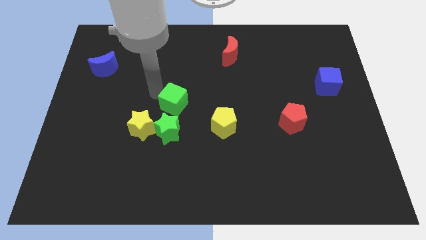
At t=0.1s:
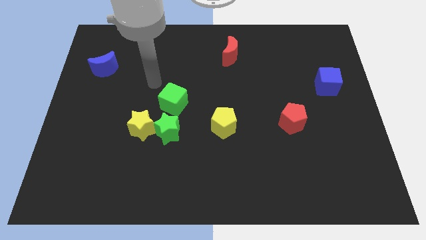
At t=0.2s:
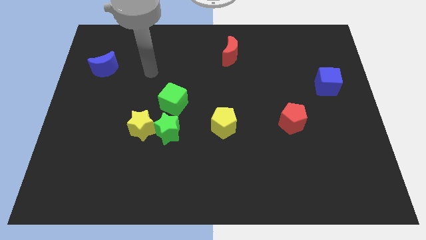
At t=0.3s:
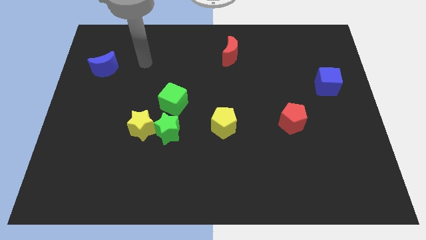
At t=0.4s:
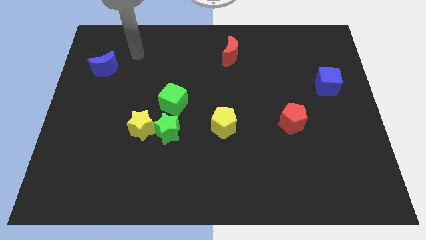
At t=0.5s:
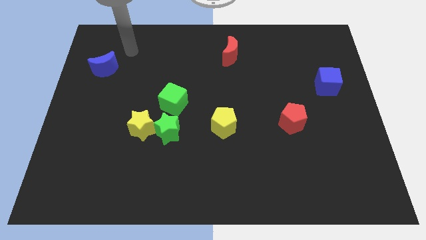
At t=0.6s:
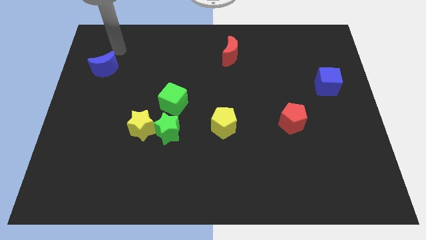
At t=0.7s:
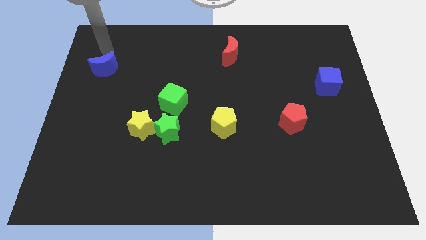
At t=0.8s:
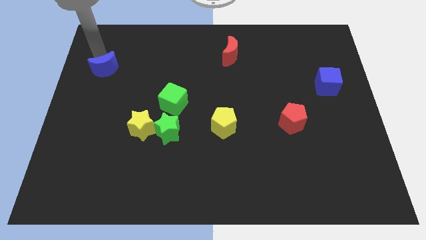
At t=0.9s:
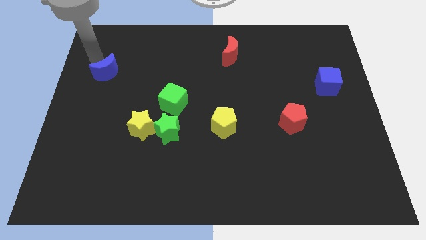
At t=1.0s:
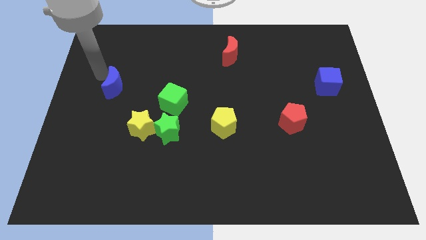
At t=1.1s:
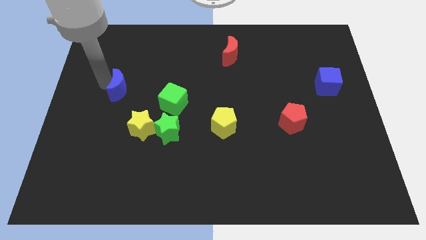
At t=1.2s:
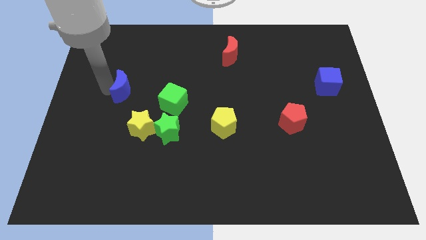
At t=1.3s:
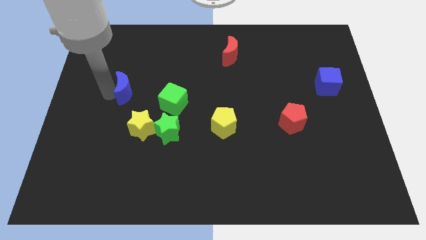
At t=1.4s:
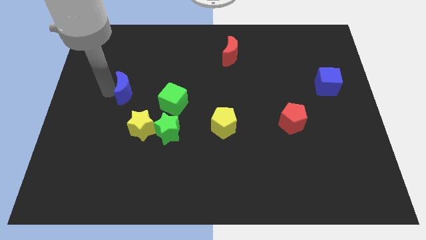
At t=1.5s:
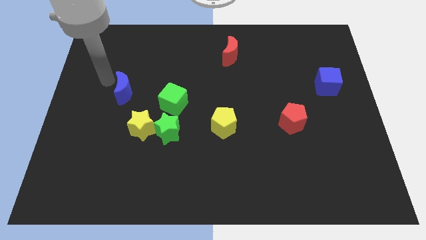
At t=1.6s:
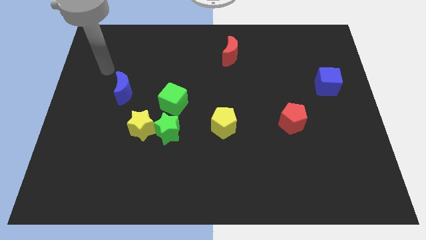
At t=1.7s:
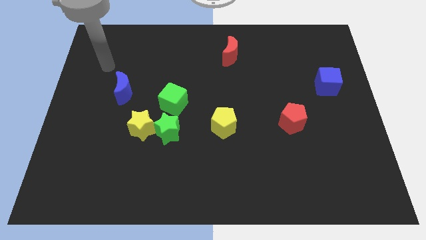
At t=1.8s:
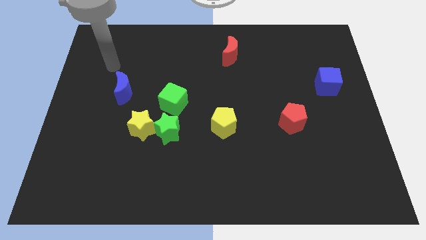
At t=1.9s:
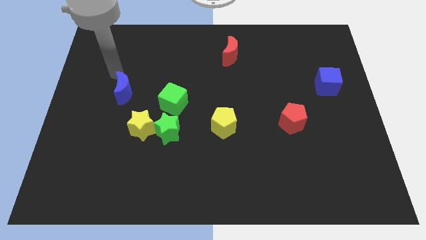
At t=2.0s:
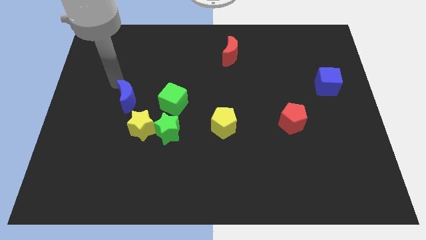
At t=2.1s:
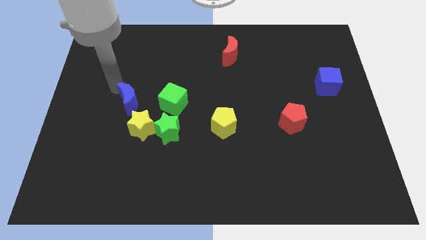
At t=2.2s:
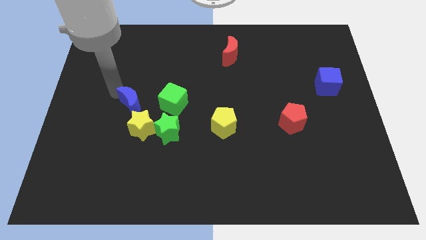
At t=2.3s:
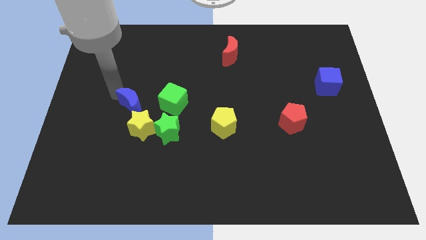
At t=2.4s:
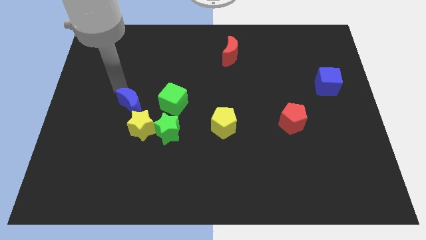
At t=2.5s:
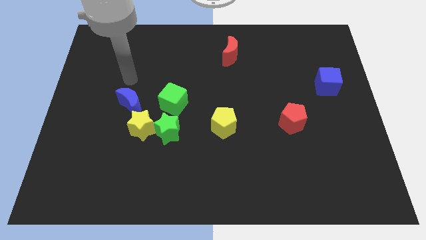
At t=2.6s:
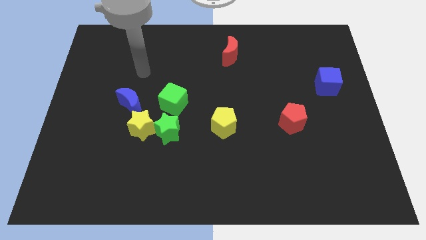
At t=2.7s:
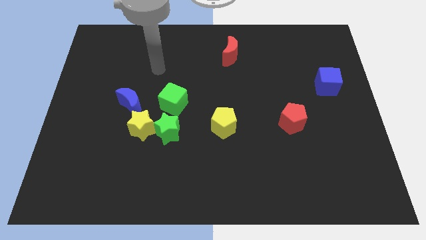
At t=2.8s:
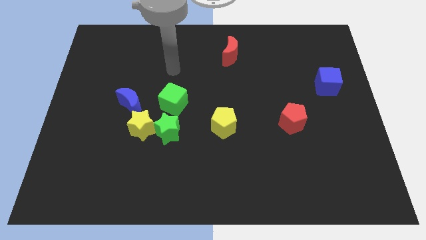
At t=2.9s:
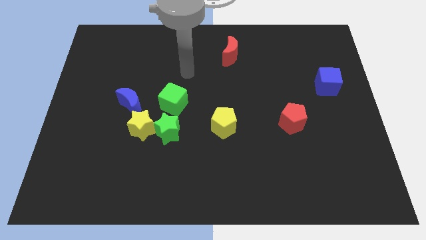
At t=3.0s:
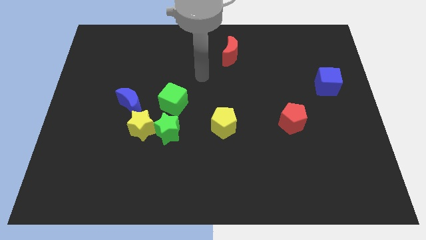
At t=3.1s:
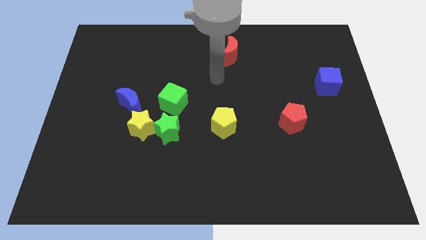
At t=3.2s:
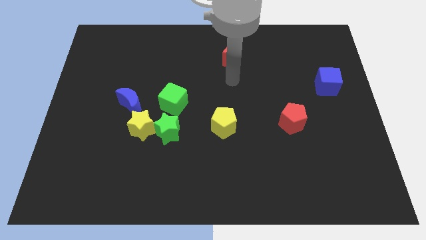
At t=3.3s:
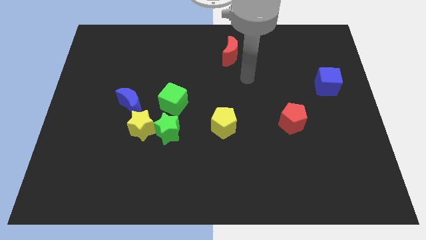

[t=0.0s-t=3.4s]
place the blue moon at the top of yellow star

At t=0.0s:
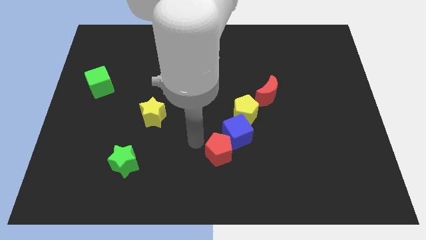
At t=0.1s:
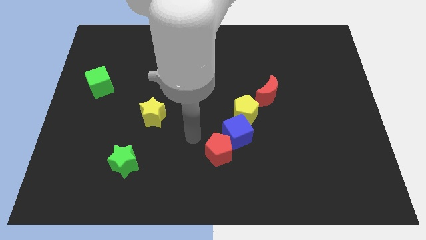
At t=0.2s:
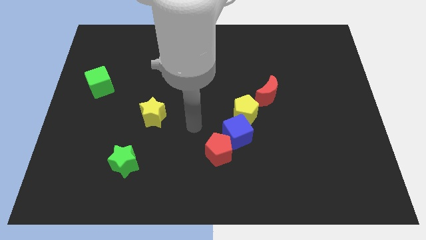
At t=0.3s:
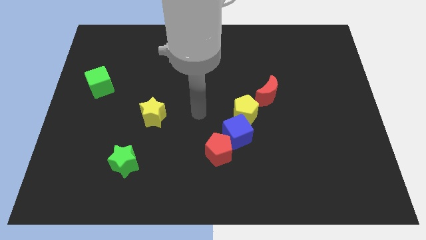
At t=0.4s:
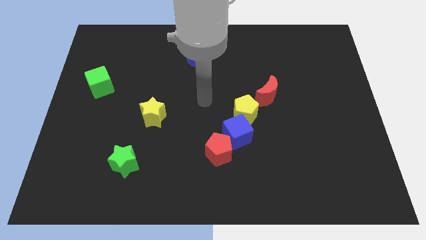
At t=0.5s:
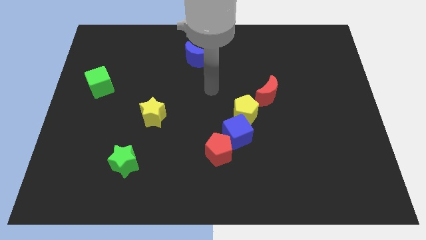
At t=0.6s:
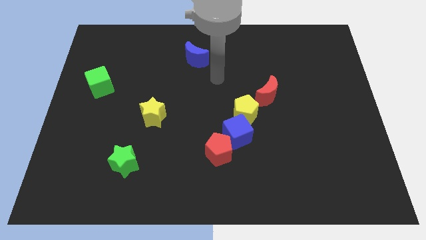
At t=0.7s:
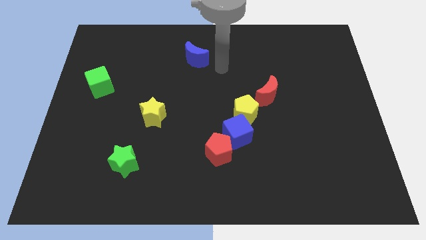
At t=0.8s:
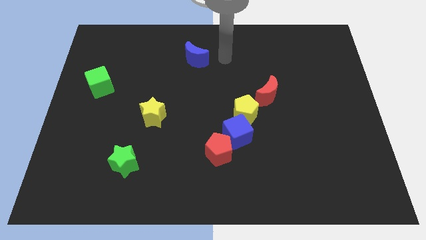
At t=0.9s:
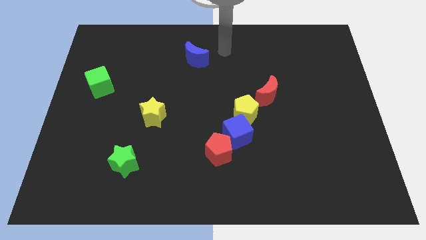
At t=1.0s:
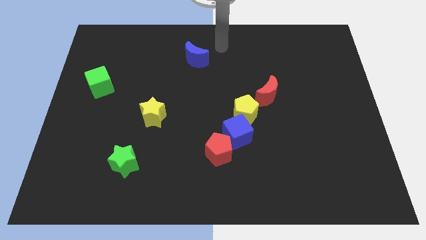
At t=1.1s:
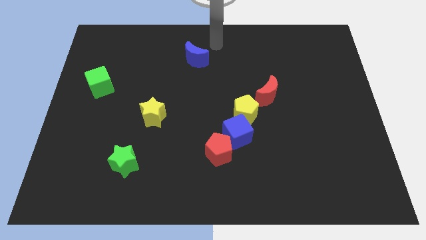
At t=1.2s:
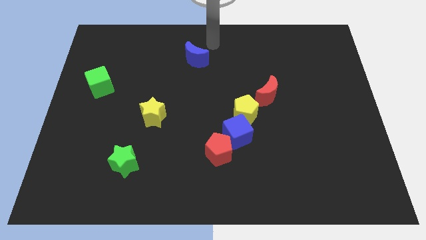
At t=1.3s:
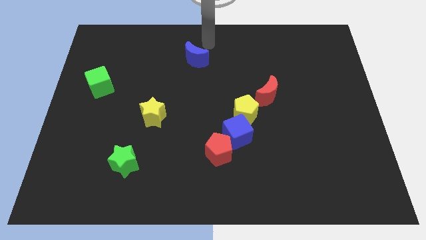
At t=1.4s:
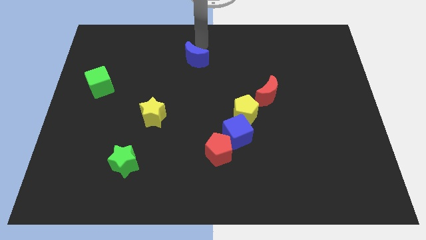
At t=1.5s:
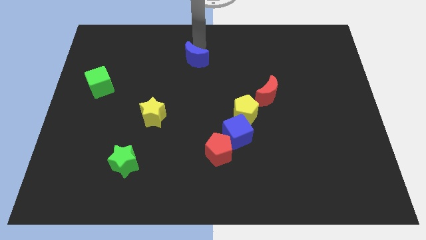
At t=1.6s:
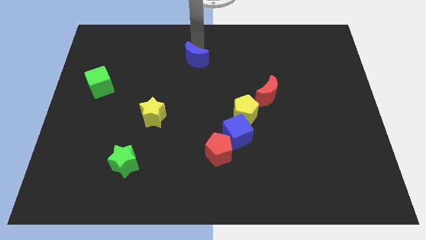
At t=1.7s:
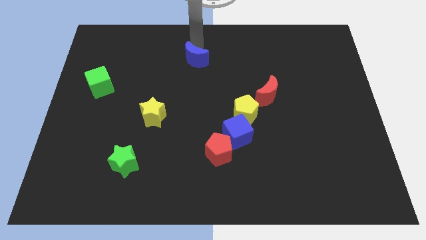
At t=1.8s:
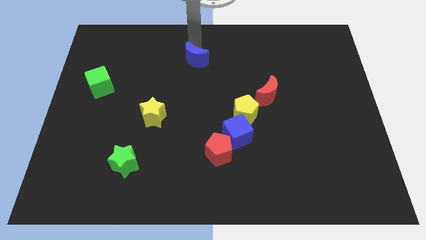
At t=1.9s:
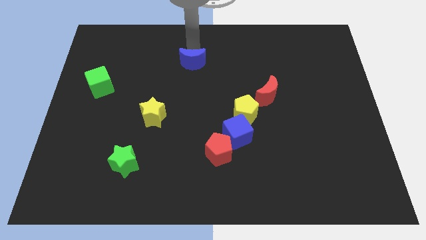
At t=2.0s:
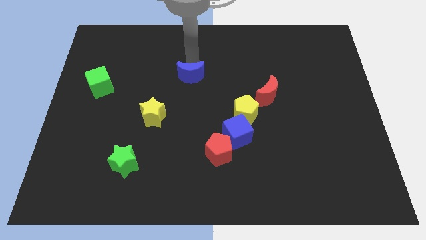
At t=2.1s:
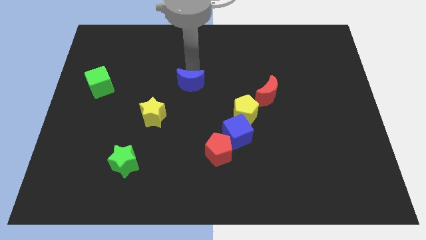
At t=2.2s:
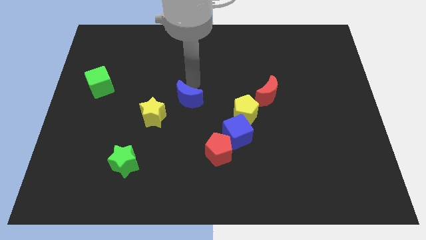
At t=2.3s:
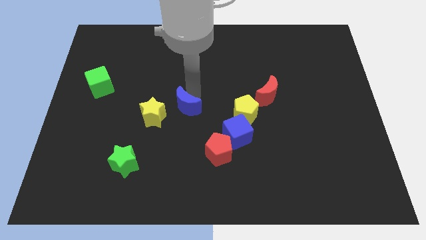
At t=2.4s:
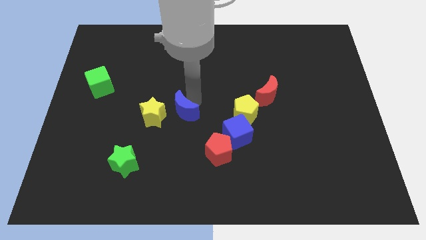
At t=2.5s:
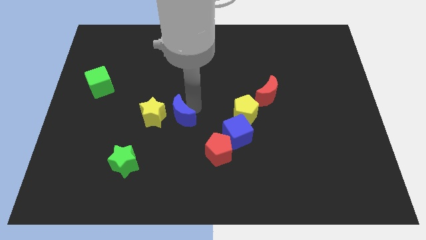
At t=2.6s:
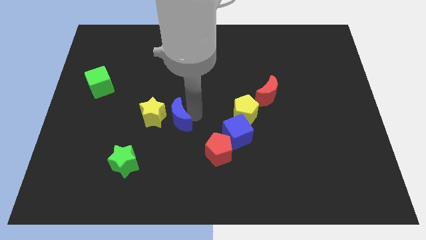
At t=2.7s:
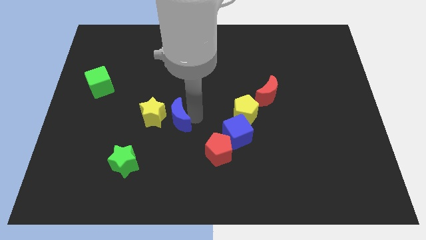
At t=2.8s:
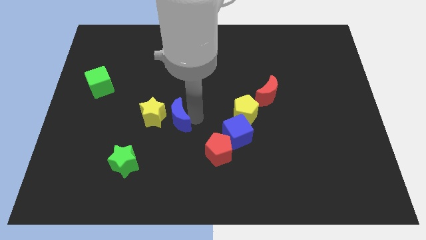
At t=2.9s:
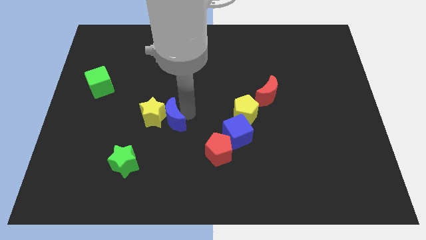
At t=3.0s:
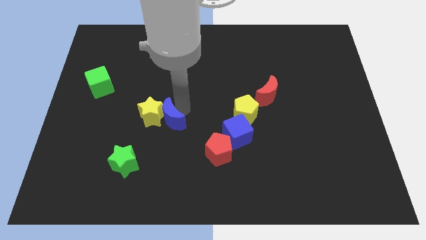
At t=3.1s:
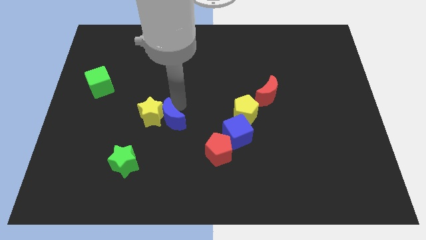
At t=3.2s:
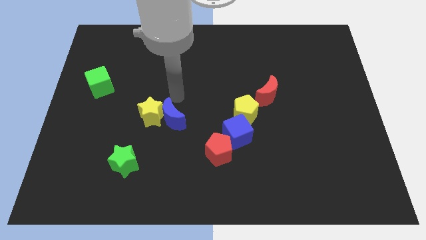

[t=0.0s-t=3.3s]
place the blue moon to the right of the yellow star

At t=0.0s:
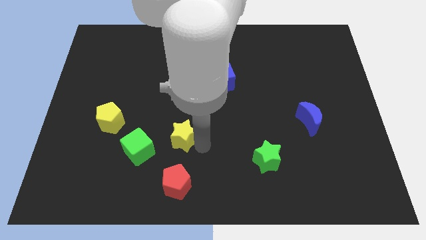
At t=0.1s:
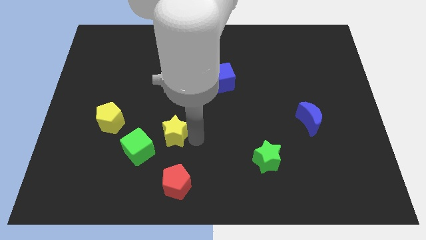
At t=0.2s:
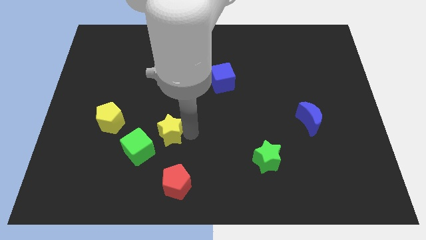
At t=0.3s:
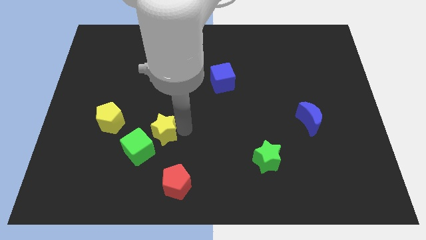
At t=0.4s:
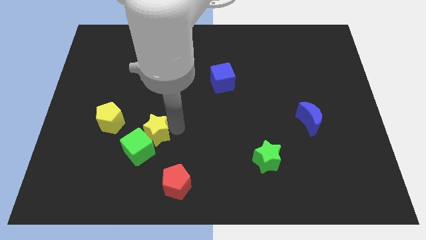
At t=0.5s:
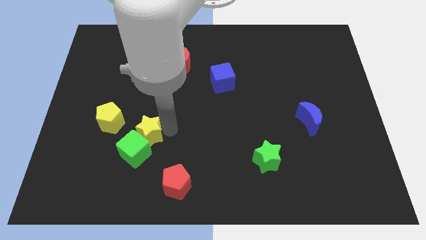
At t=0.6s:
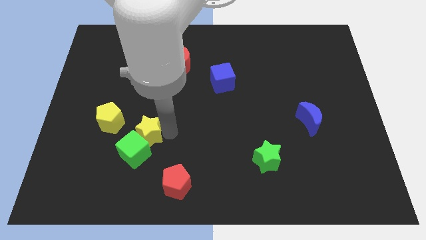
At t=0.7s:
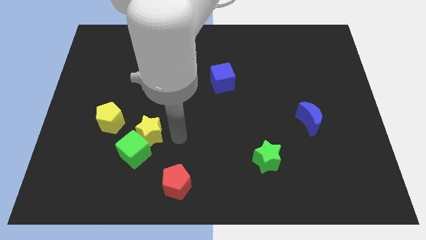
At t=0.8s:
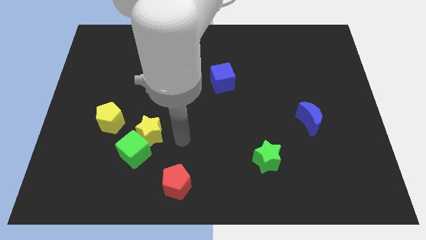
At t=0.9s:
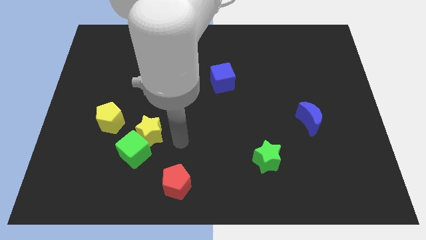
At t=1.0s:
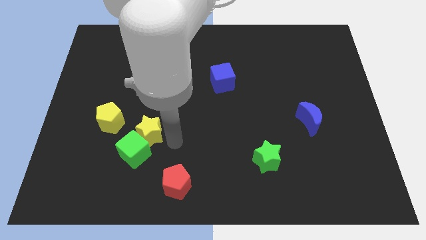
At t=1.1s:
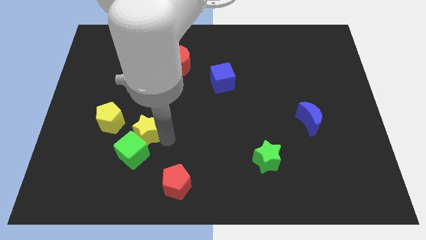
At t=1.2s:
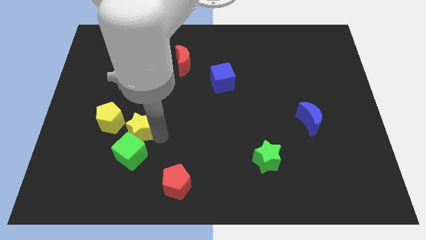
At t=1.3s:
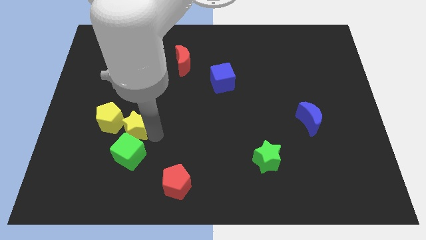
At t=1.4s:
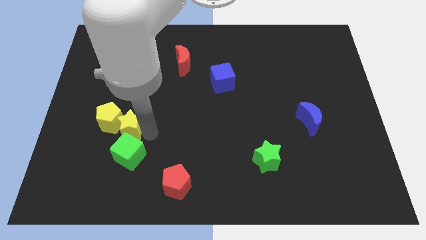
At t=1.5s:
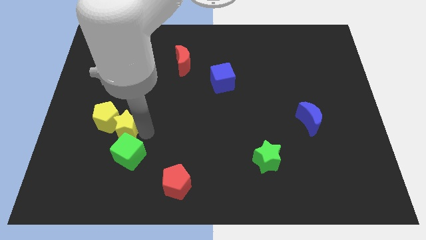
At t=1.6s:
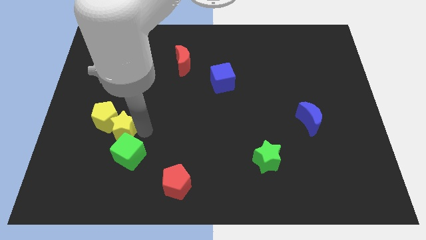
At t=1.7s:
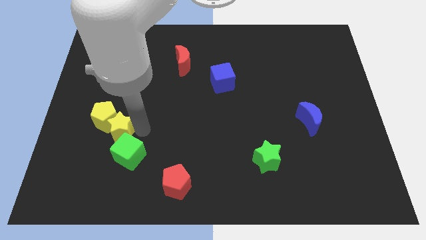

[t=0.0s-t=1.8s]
push the yellow star towards the yellow pentagon

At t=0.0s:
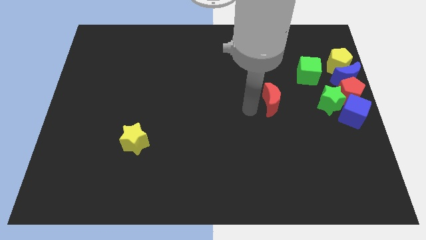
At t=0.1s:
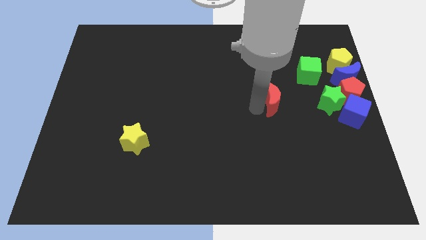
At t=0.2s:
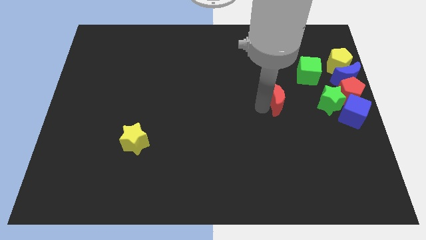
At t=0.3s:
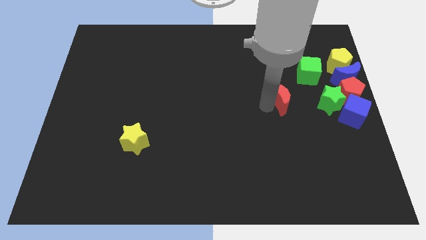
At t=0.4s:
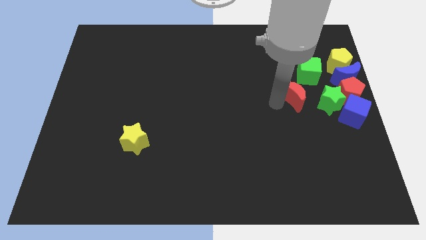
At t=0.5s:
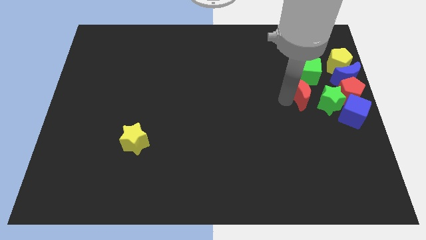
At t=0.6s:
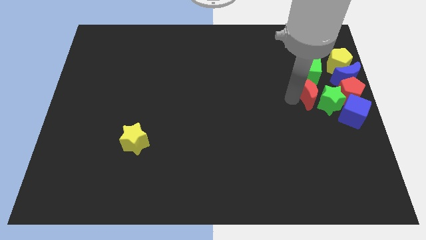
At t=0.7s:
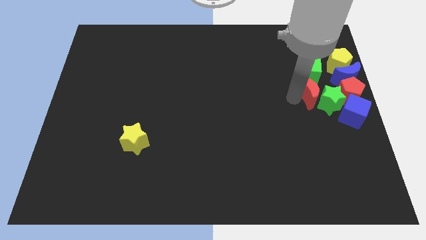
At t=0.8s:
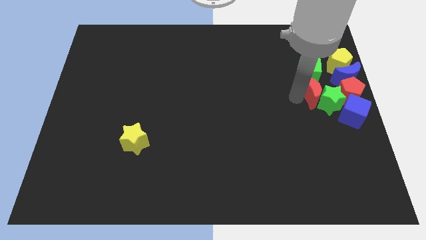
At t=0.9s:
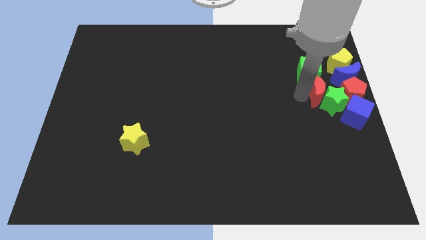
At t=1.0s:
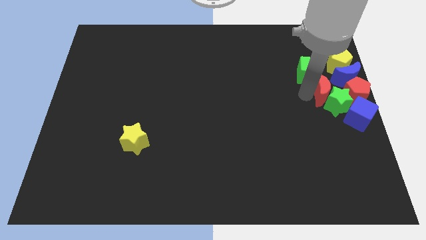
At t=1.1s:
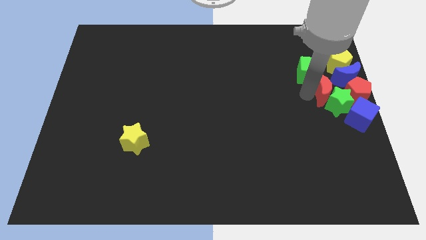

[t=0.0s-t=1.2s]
slide the red crescent into the green star
